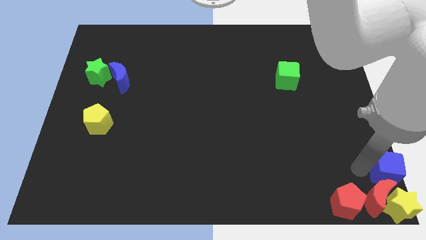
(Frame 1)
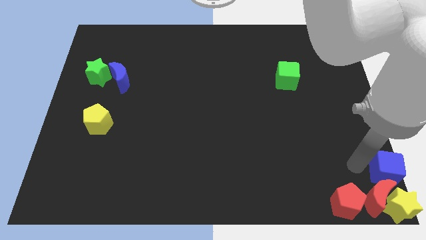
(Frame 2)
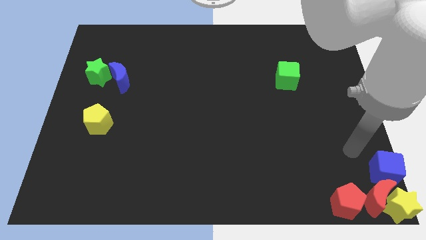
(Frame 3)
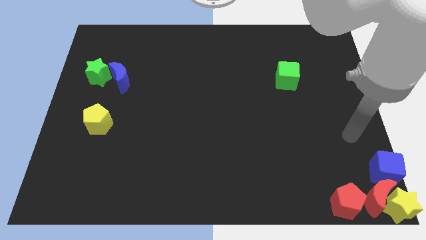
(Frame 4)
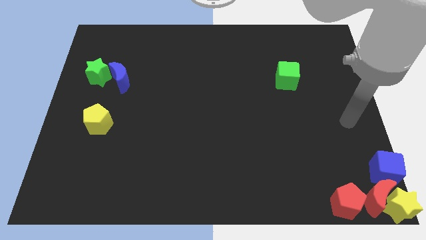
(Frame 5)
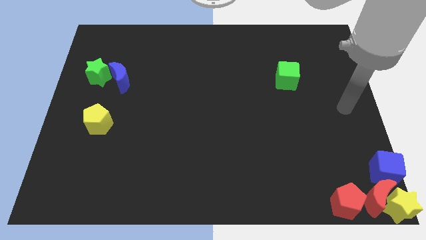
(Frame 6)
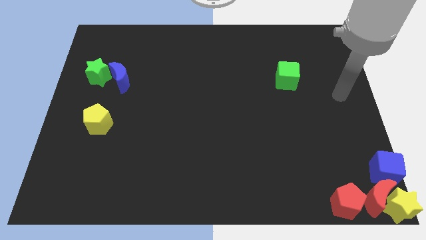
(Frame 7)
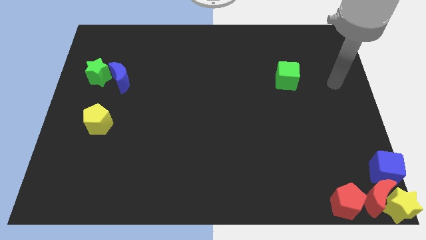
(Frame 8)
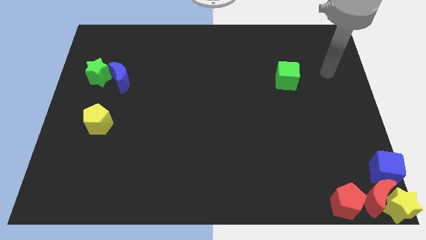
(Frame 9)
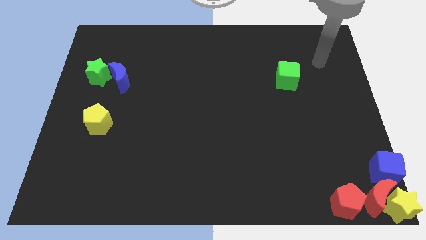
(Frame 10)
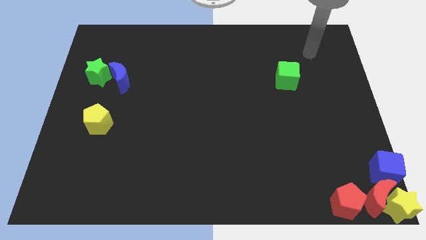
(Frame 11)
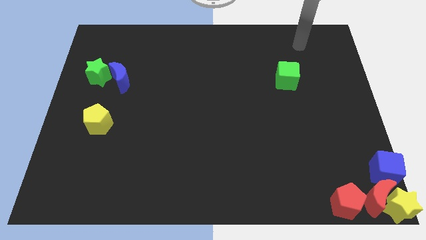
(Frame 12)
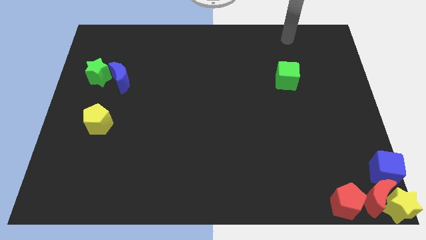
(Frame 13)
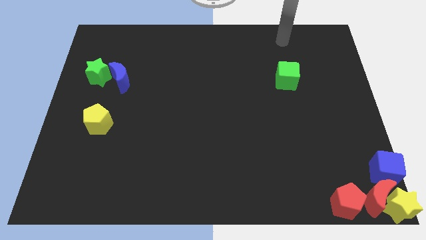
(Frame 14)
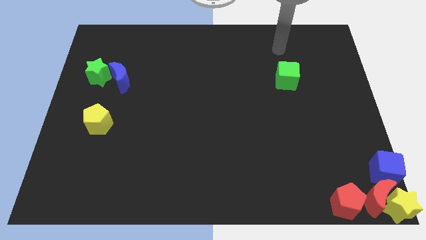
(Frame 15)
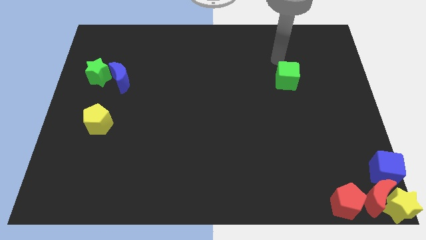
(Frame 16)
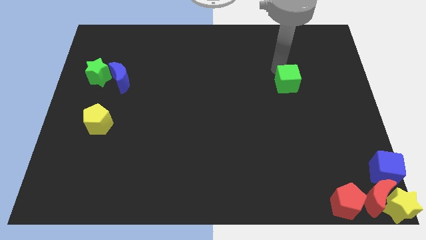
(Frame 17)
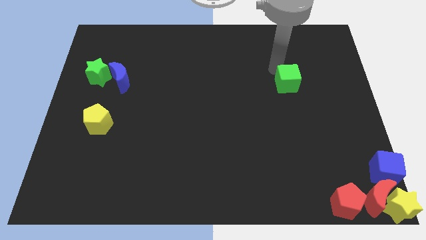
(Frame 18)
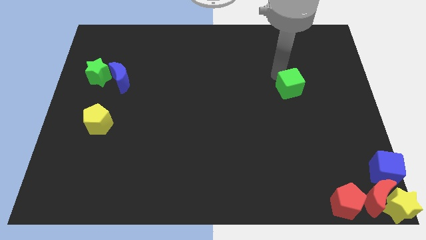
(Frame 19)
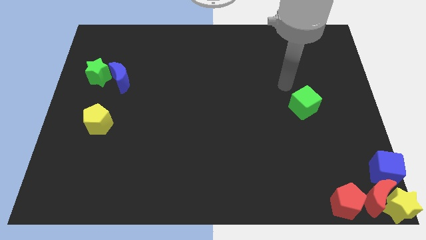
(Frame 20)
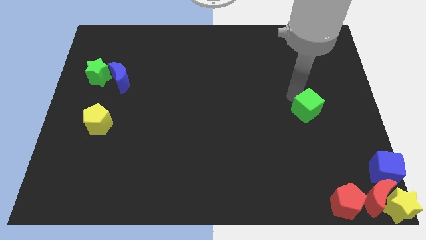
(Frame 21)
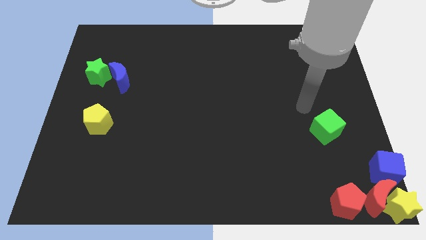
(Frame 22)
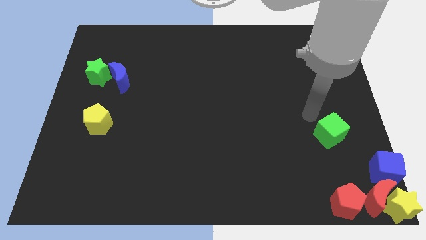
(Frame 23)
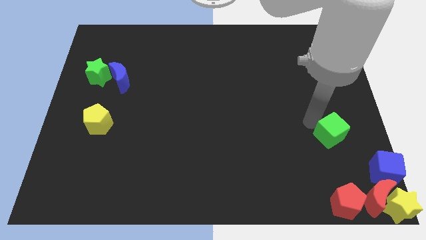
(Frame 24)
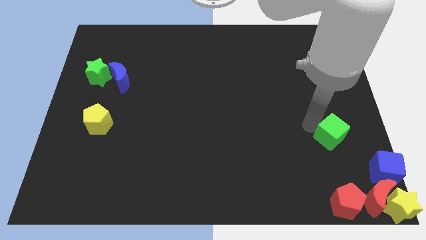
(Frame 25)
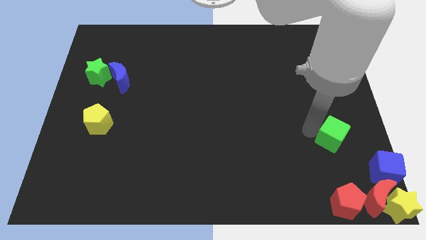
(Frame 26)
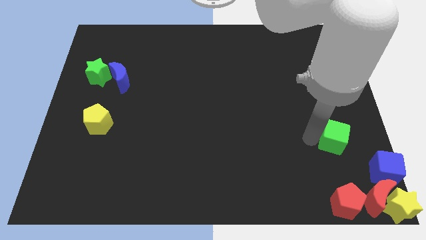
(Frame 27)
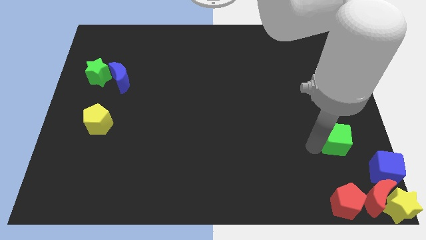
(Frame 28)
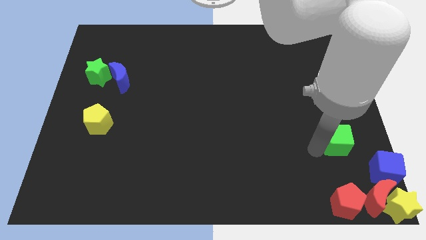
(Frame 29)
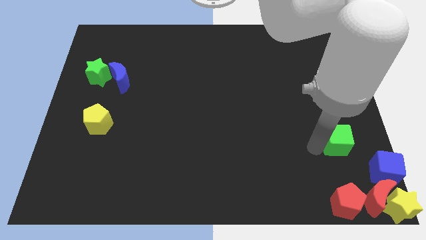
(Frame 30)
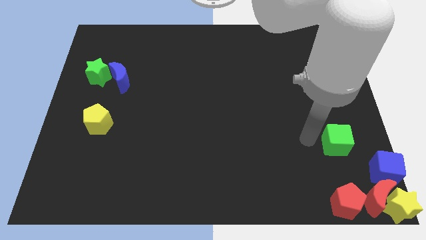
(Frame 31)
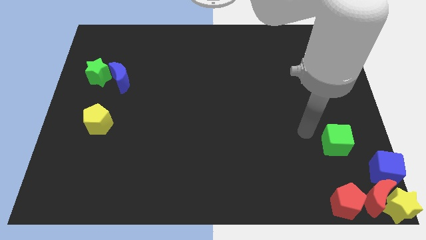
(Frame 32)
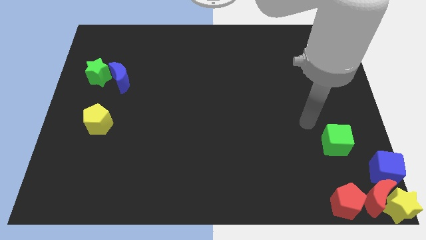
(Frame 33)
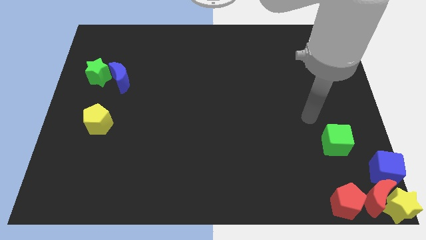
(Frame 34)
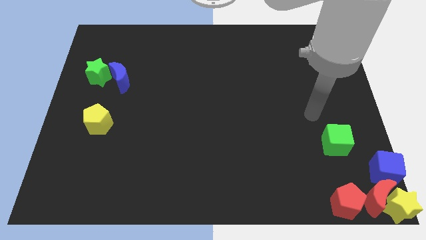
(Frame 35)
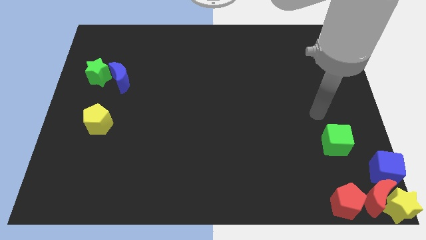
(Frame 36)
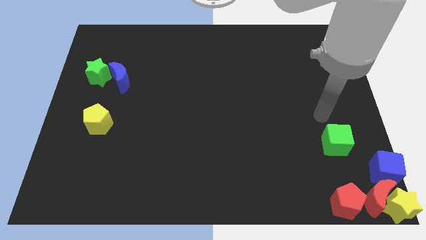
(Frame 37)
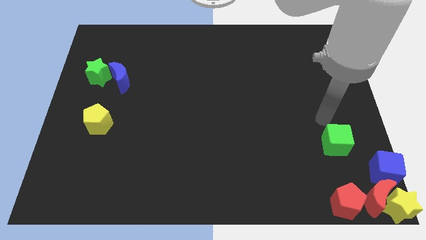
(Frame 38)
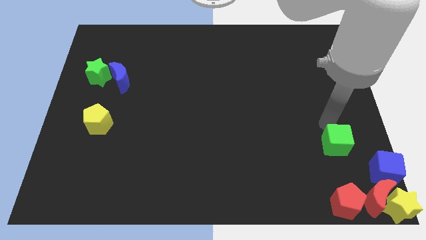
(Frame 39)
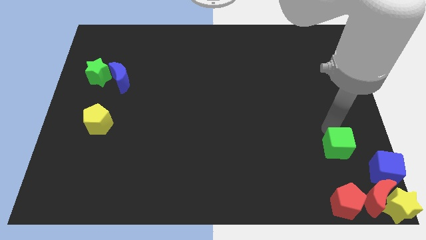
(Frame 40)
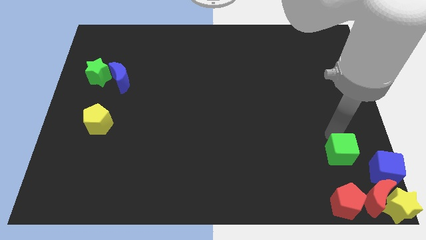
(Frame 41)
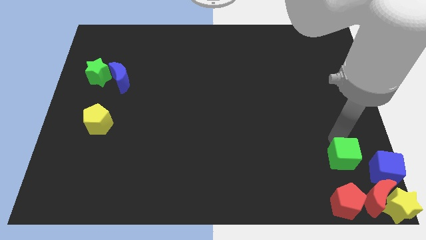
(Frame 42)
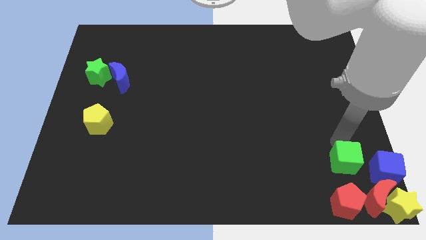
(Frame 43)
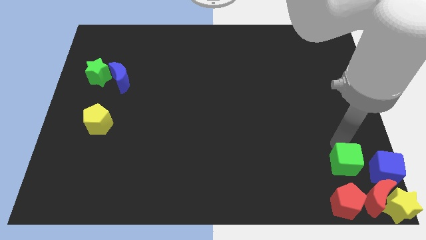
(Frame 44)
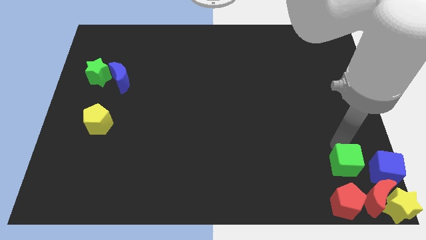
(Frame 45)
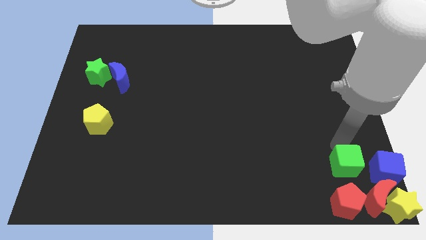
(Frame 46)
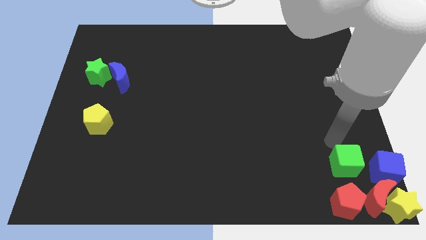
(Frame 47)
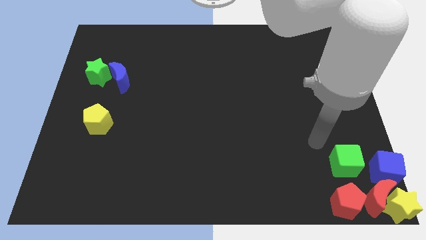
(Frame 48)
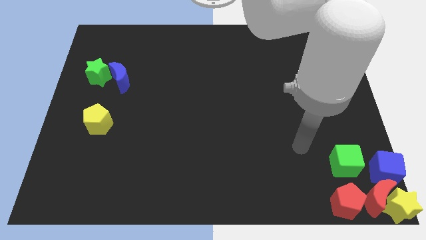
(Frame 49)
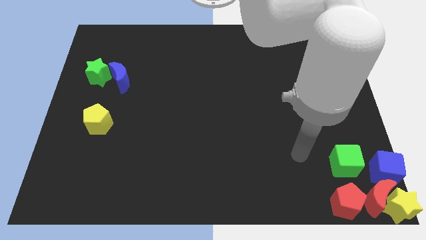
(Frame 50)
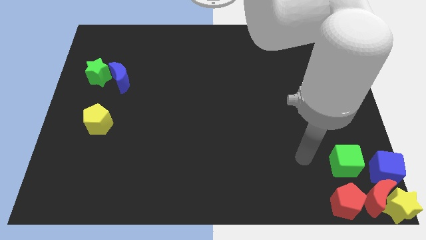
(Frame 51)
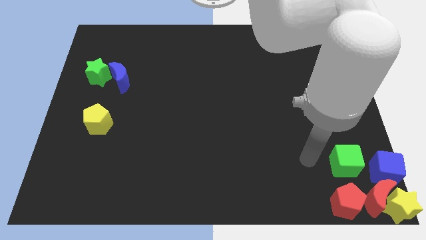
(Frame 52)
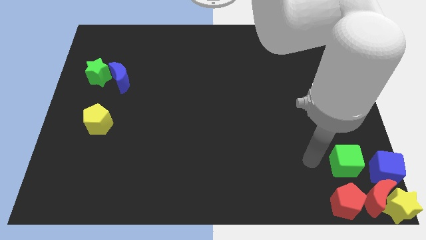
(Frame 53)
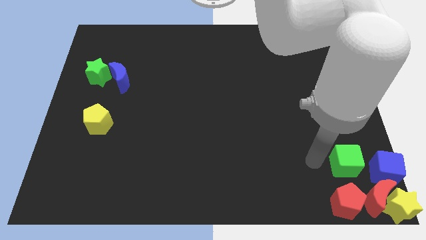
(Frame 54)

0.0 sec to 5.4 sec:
place the green cube left to the blue cube

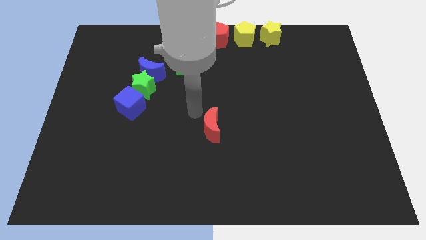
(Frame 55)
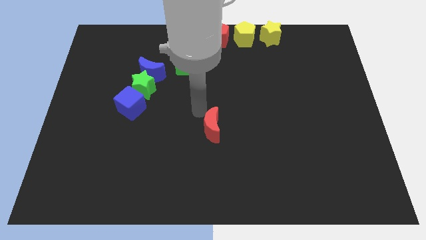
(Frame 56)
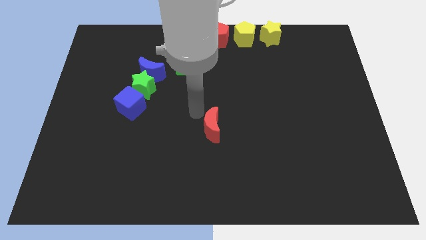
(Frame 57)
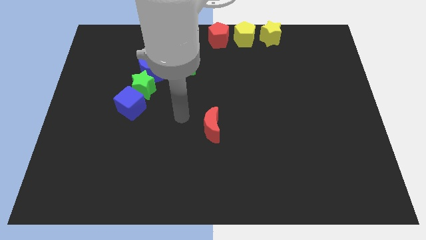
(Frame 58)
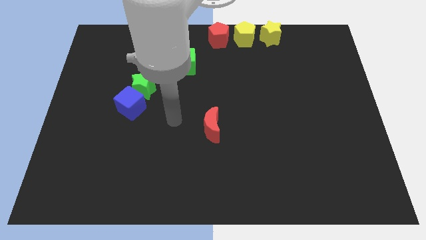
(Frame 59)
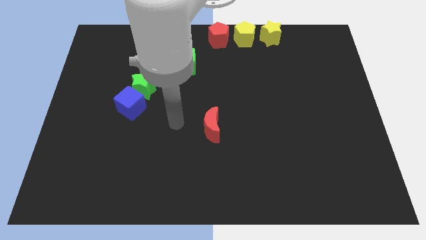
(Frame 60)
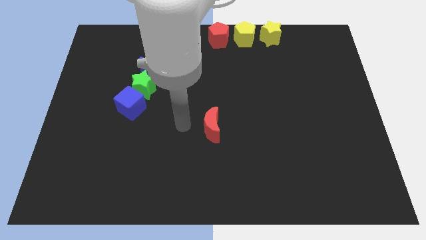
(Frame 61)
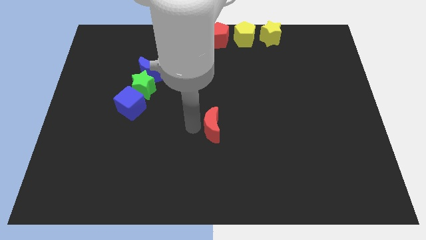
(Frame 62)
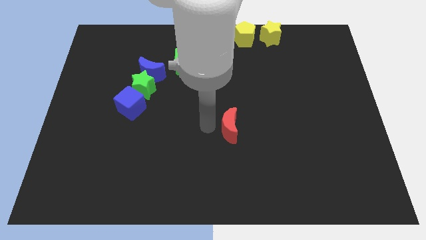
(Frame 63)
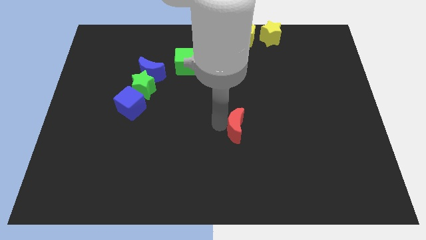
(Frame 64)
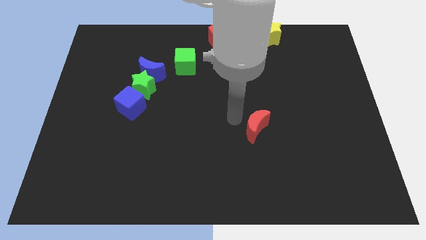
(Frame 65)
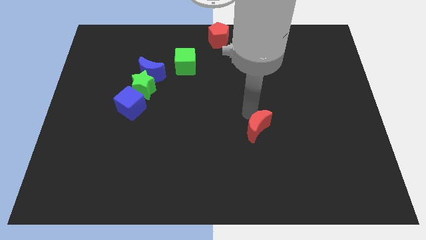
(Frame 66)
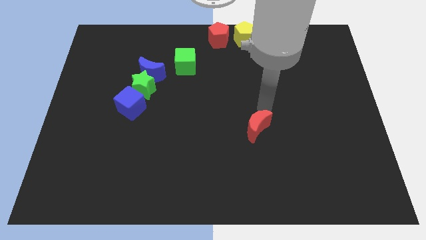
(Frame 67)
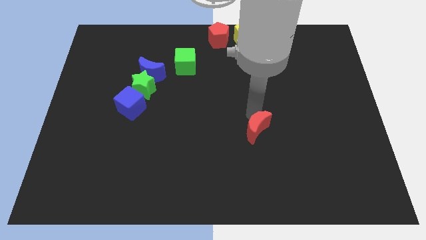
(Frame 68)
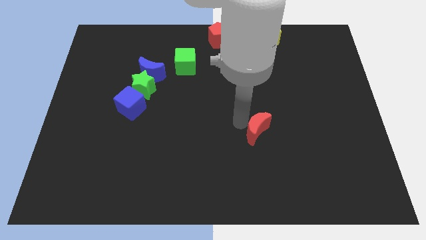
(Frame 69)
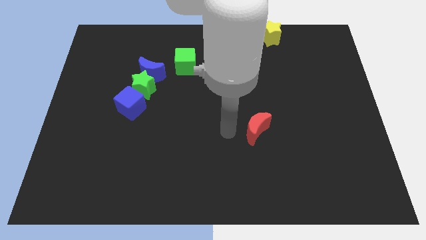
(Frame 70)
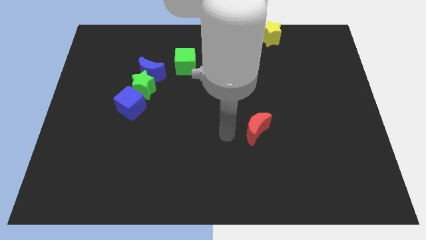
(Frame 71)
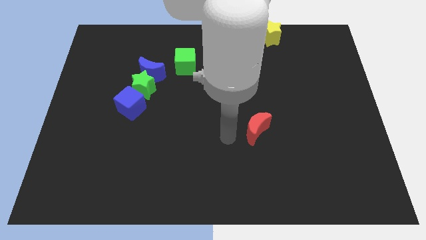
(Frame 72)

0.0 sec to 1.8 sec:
move the red crescent to right side of the board

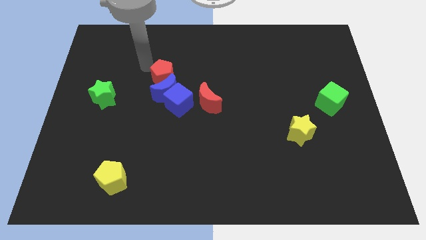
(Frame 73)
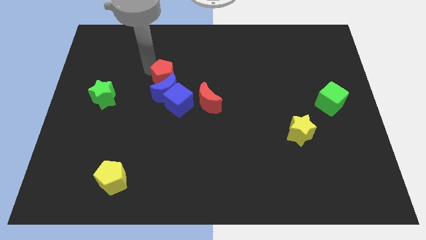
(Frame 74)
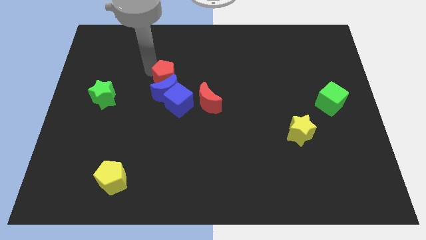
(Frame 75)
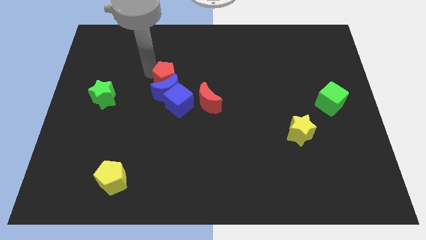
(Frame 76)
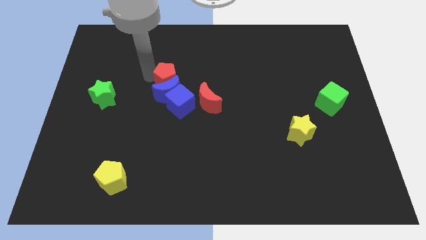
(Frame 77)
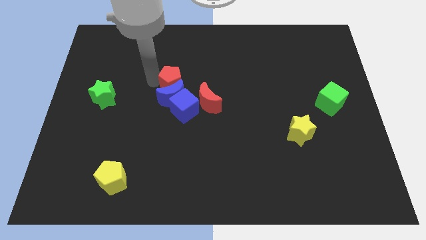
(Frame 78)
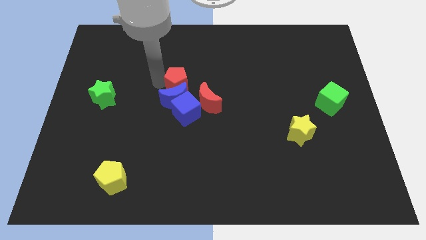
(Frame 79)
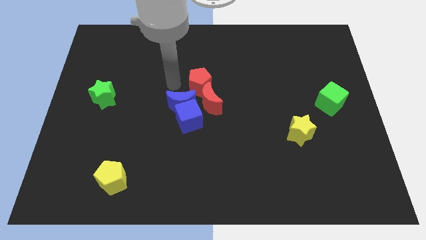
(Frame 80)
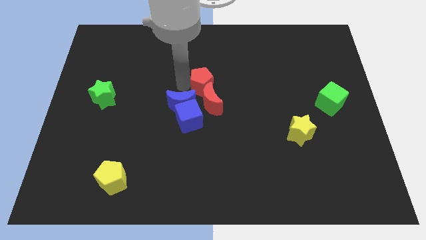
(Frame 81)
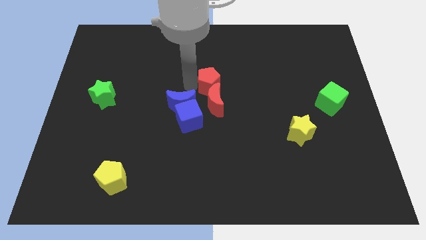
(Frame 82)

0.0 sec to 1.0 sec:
push the red pentagon into the red crescent

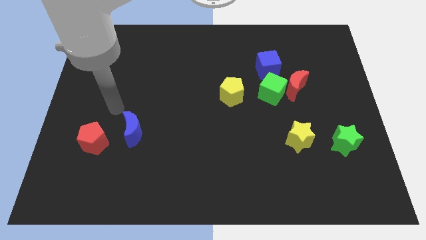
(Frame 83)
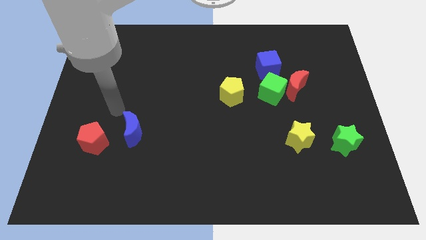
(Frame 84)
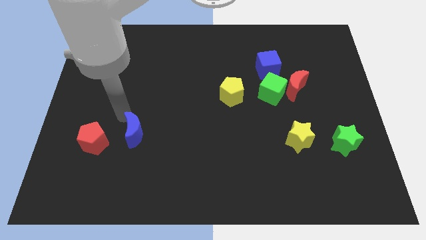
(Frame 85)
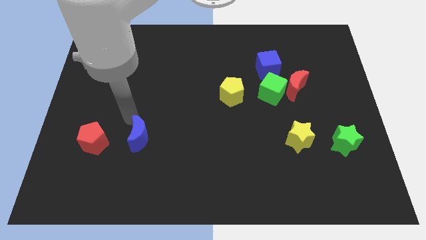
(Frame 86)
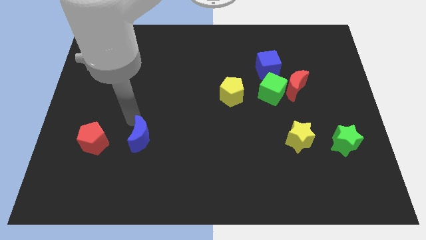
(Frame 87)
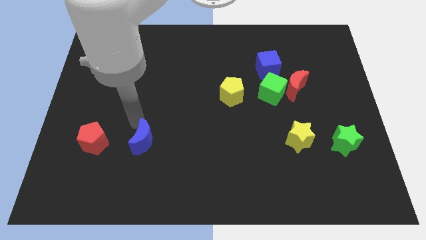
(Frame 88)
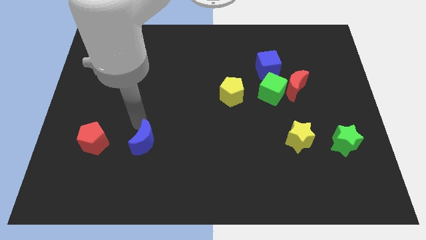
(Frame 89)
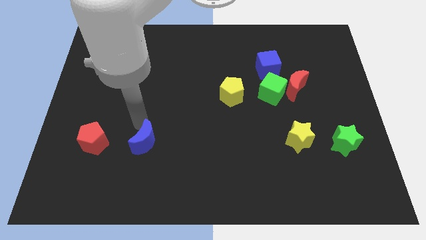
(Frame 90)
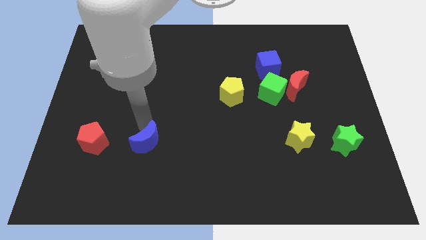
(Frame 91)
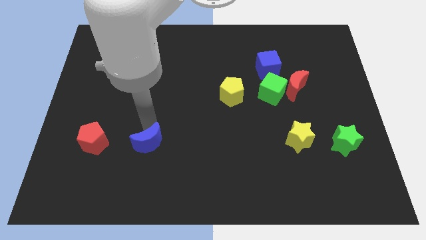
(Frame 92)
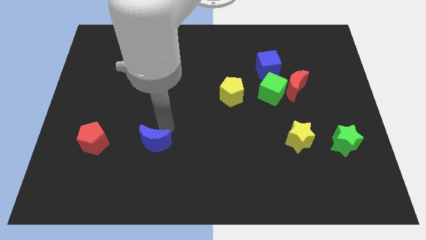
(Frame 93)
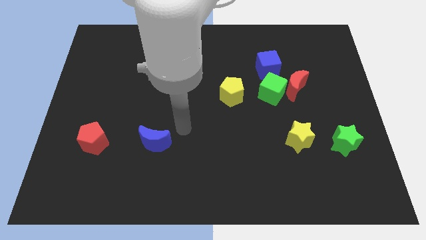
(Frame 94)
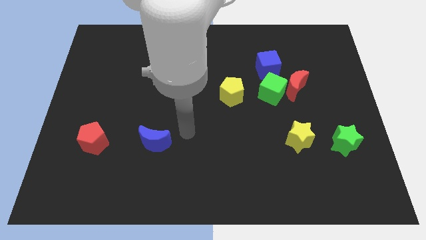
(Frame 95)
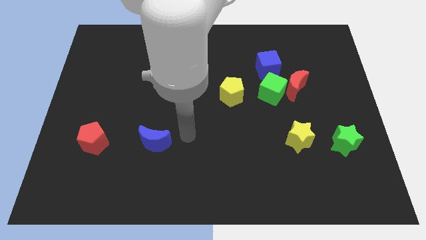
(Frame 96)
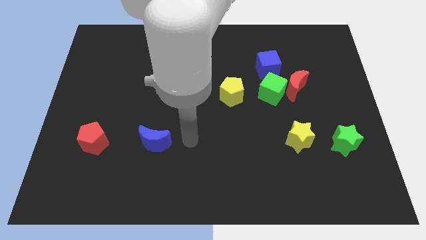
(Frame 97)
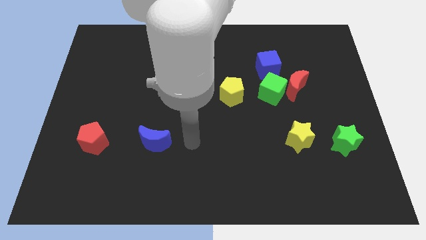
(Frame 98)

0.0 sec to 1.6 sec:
put the blue crescent and red pentagon in a line horizontally
